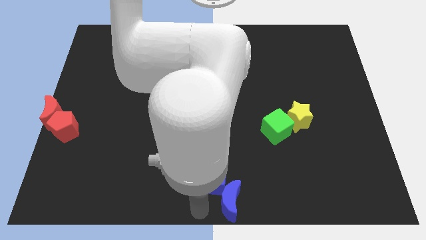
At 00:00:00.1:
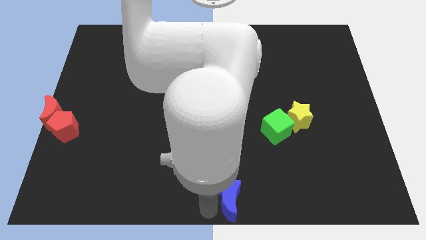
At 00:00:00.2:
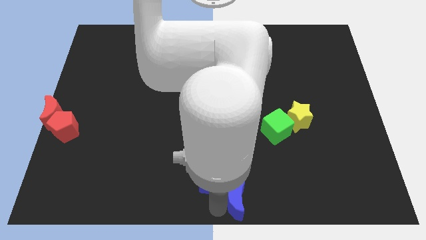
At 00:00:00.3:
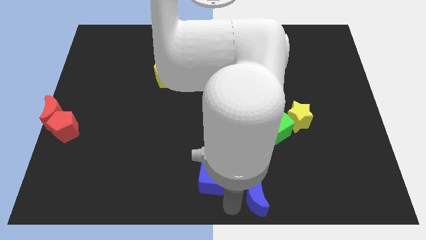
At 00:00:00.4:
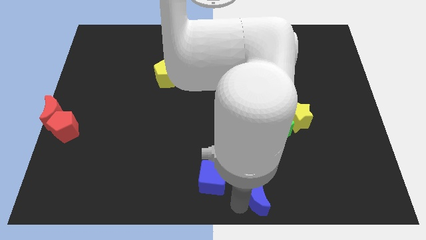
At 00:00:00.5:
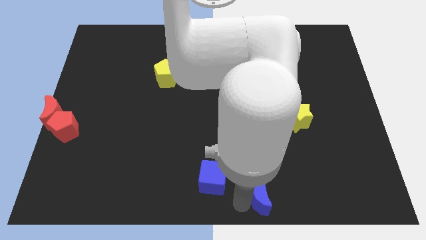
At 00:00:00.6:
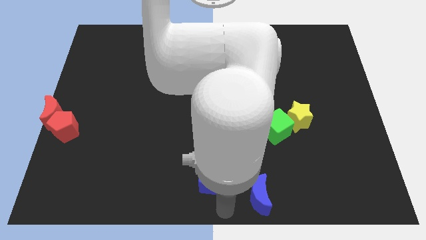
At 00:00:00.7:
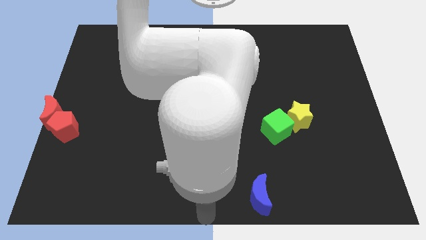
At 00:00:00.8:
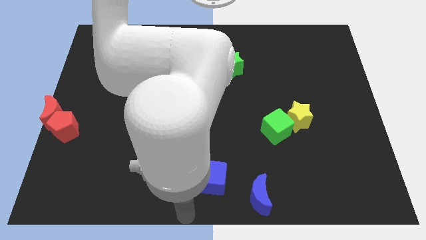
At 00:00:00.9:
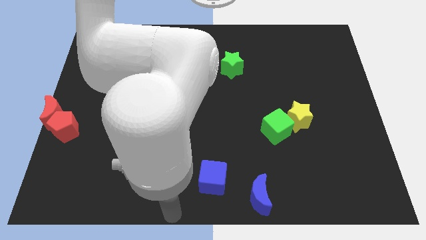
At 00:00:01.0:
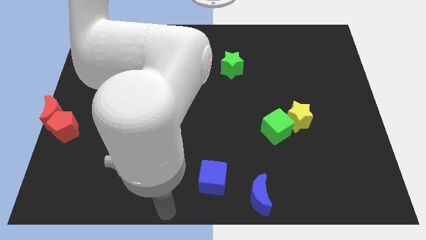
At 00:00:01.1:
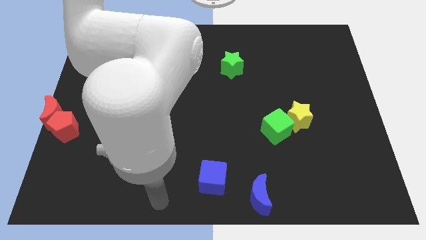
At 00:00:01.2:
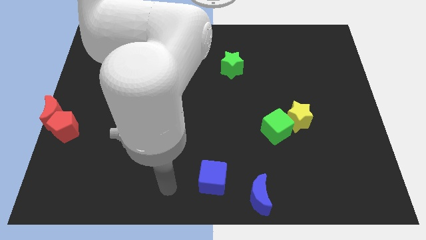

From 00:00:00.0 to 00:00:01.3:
separate the blue crescent from the blue cube

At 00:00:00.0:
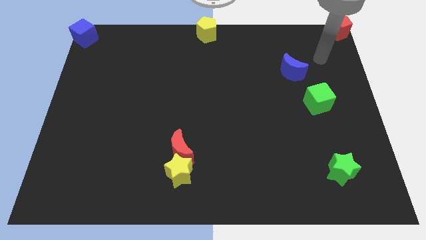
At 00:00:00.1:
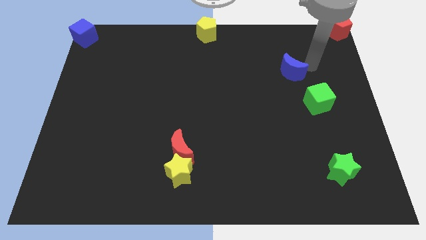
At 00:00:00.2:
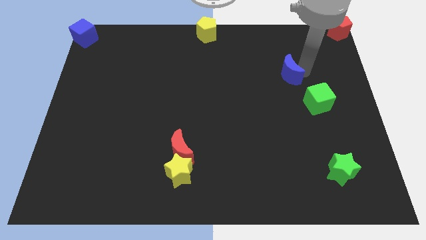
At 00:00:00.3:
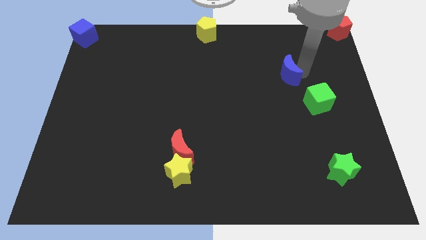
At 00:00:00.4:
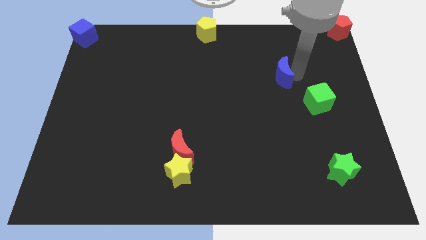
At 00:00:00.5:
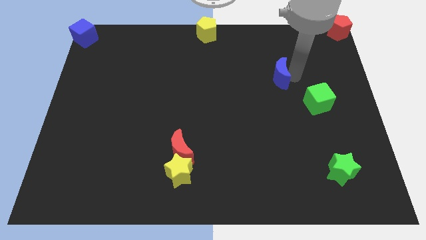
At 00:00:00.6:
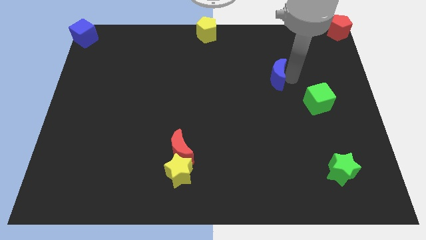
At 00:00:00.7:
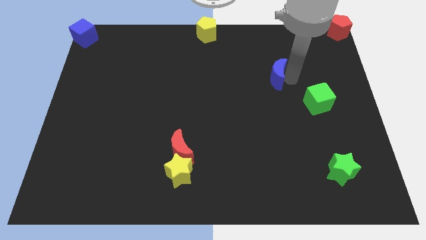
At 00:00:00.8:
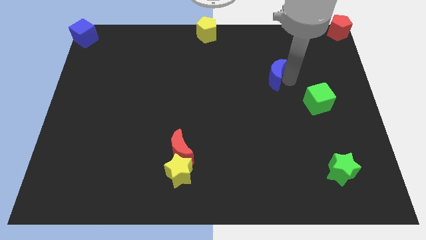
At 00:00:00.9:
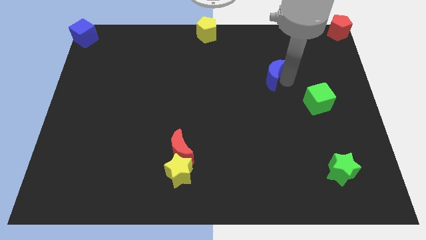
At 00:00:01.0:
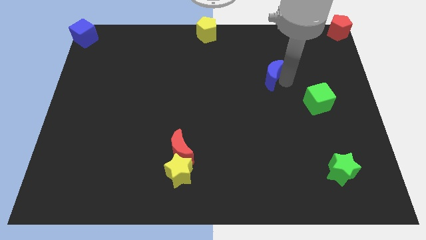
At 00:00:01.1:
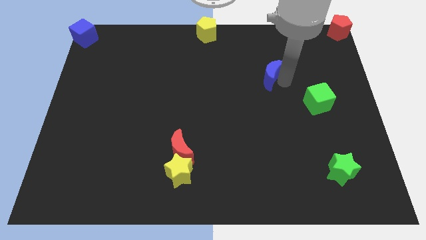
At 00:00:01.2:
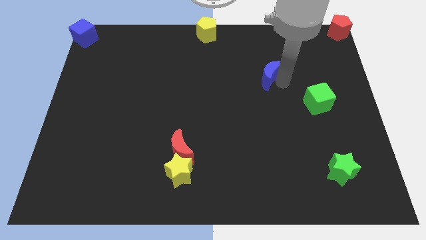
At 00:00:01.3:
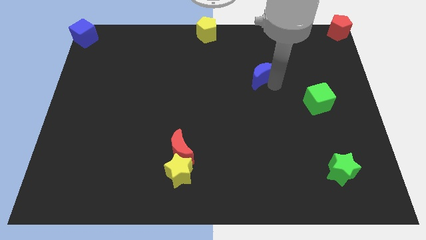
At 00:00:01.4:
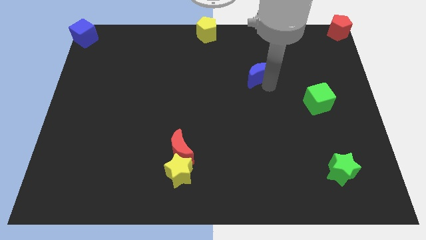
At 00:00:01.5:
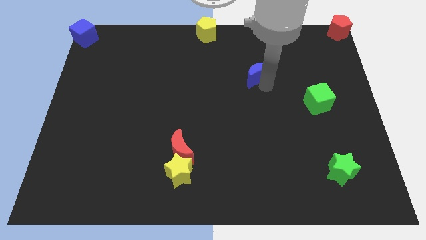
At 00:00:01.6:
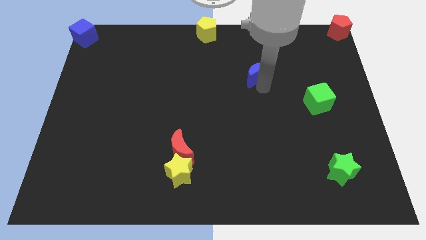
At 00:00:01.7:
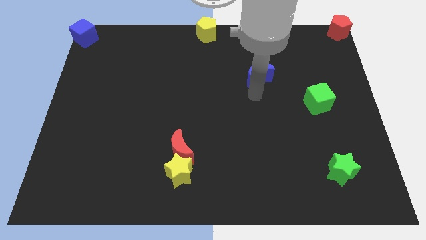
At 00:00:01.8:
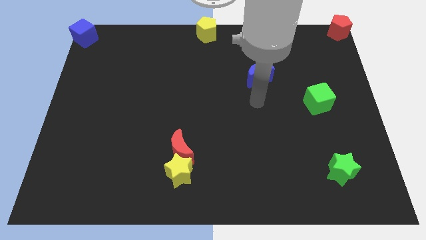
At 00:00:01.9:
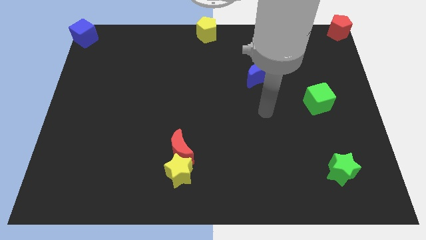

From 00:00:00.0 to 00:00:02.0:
push the blue moon to the left slightly

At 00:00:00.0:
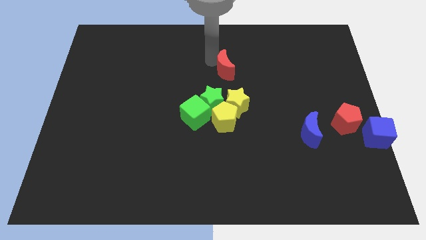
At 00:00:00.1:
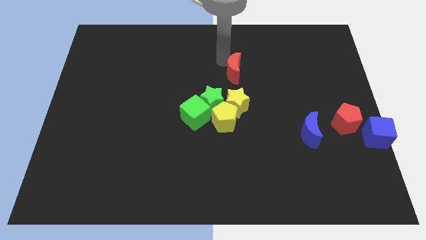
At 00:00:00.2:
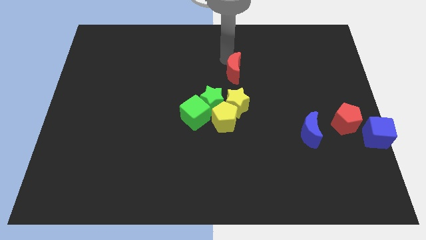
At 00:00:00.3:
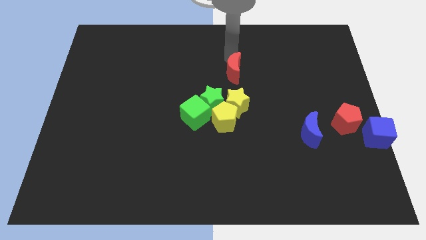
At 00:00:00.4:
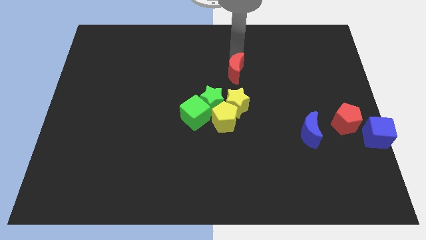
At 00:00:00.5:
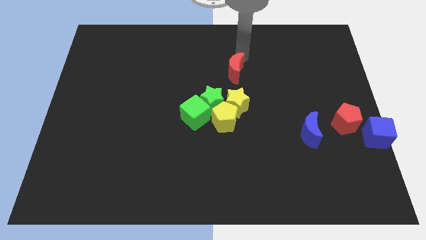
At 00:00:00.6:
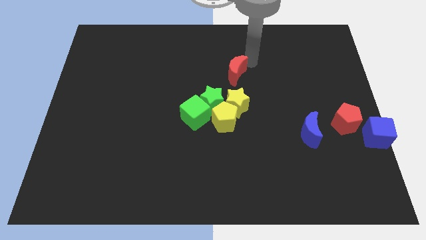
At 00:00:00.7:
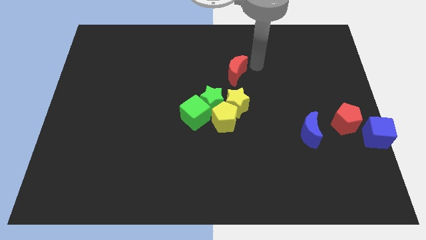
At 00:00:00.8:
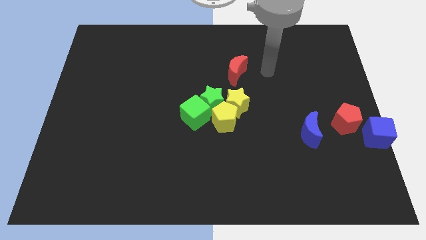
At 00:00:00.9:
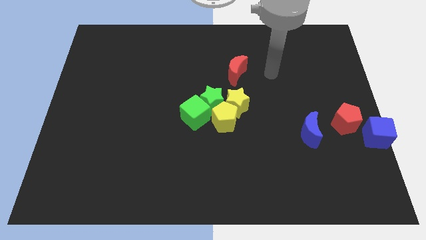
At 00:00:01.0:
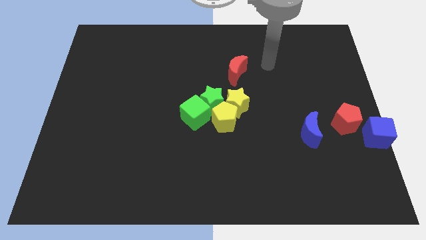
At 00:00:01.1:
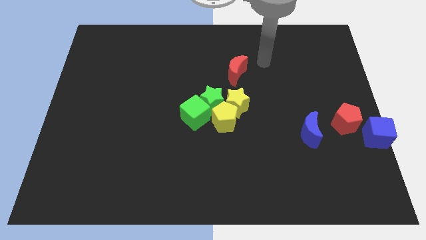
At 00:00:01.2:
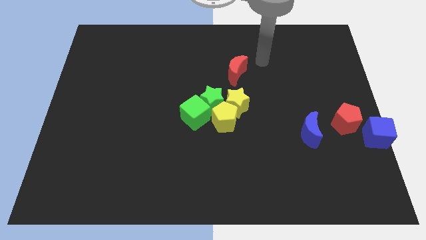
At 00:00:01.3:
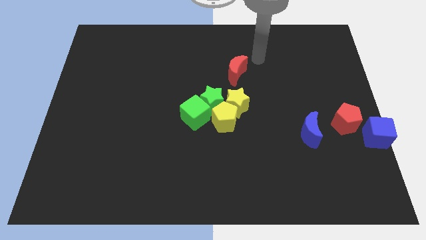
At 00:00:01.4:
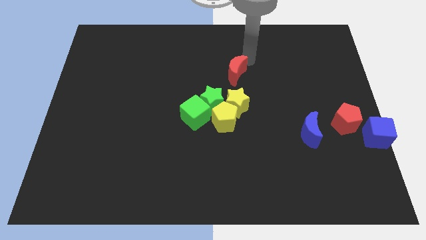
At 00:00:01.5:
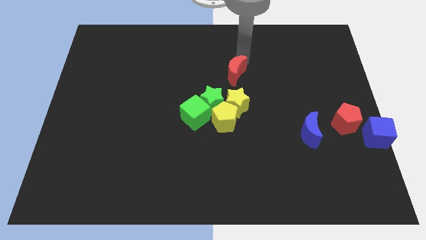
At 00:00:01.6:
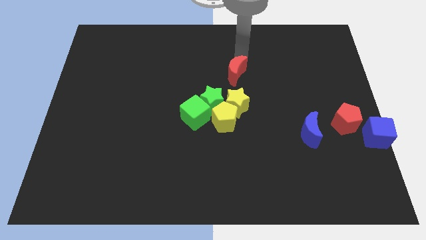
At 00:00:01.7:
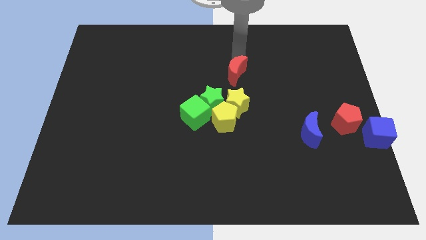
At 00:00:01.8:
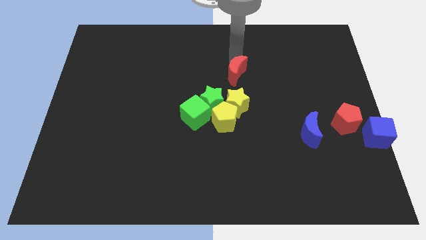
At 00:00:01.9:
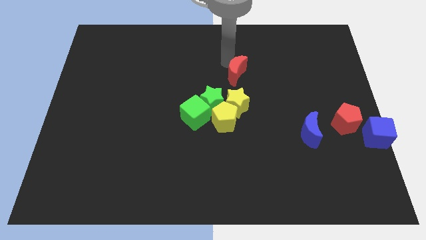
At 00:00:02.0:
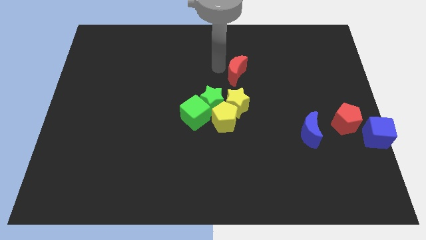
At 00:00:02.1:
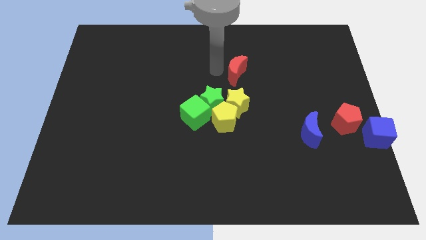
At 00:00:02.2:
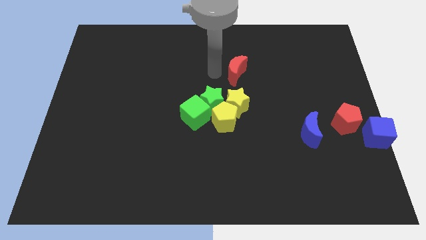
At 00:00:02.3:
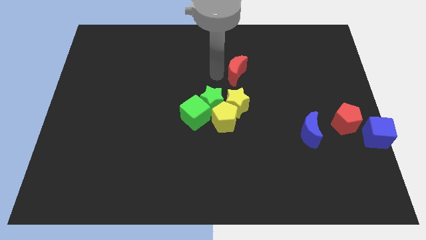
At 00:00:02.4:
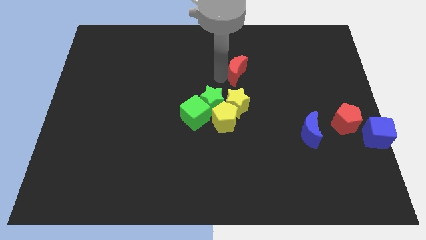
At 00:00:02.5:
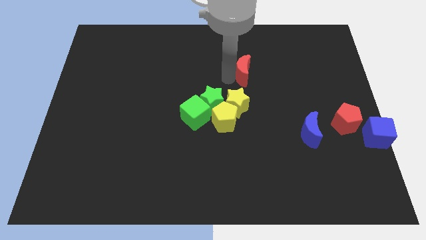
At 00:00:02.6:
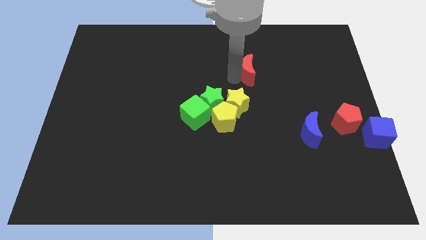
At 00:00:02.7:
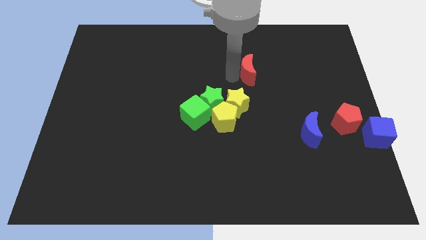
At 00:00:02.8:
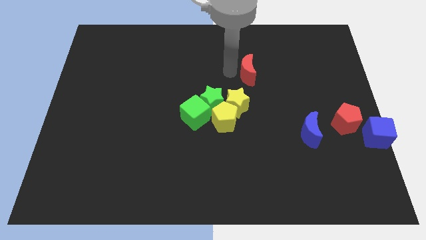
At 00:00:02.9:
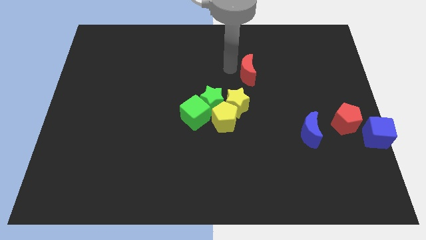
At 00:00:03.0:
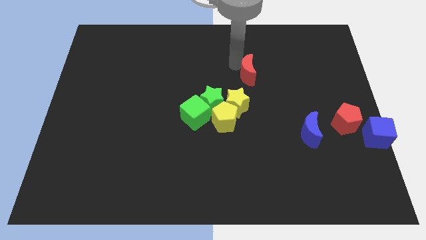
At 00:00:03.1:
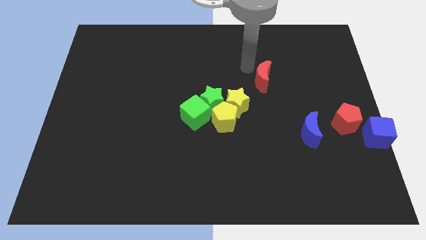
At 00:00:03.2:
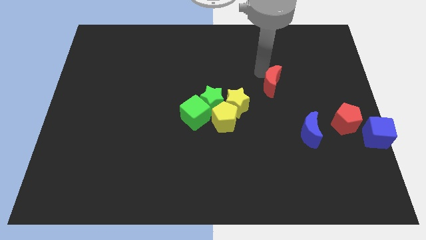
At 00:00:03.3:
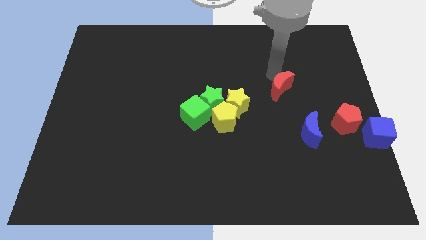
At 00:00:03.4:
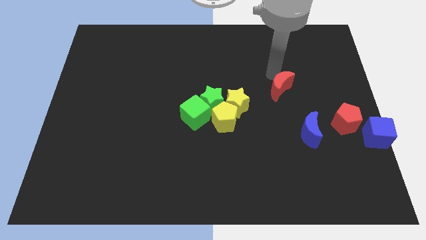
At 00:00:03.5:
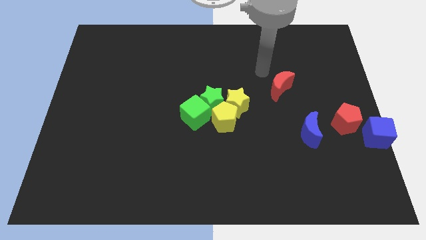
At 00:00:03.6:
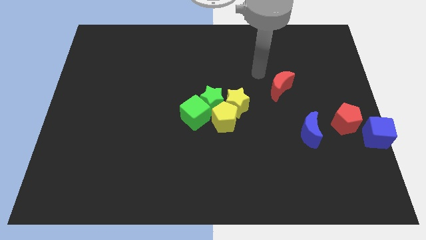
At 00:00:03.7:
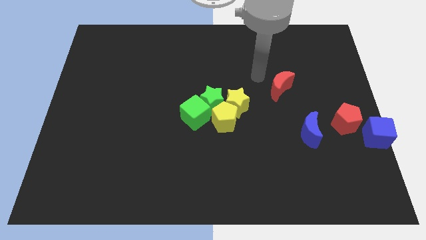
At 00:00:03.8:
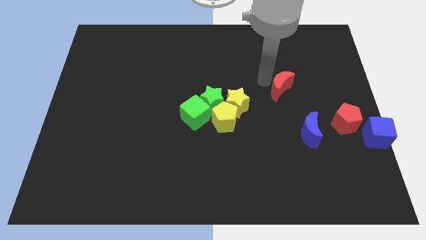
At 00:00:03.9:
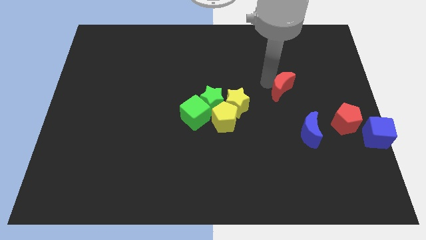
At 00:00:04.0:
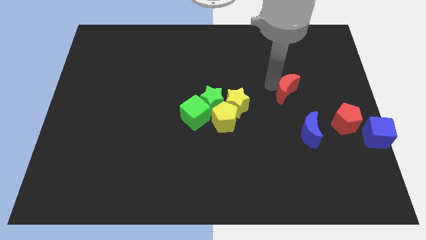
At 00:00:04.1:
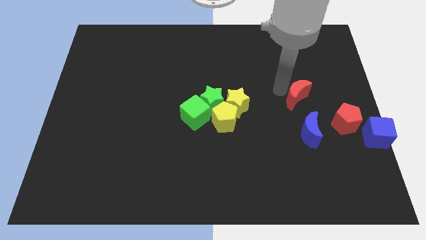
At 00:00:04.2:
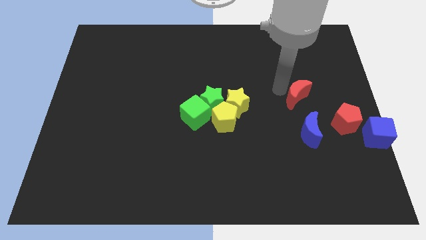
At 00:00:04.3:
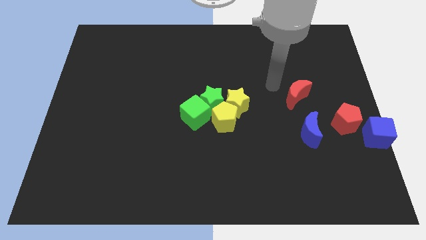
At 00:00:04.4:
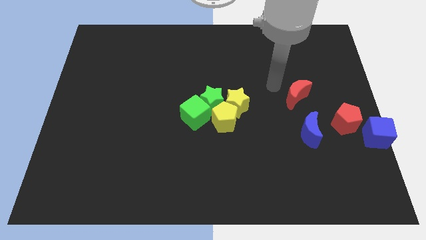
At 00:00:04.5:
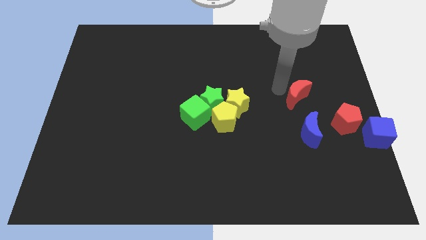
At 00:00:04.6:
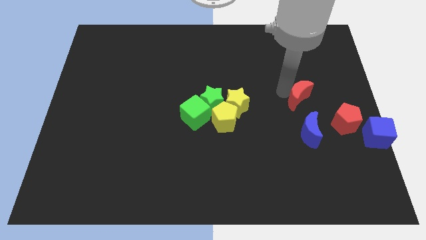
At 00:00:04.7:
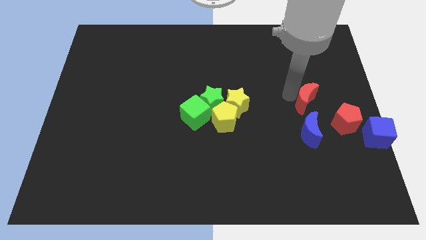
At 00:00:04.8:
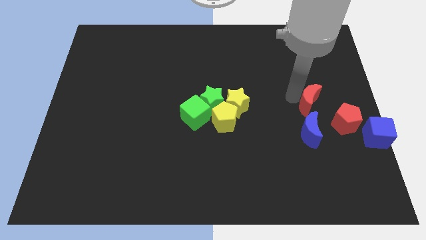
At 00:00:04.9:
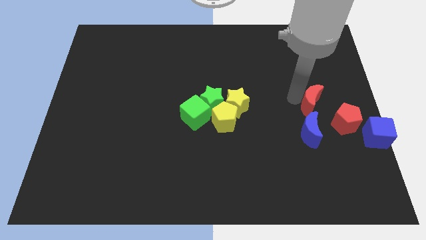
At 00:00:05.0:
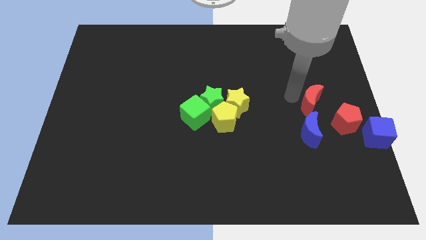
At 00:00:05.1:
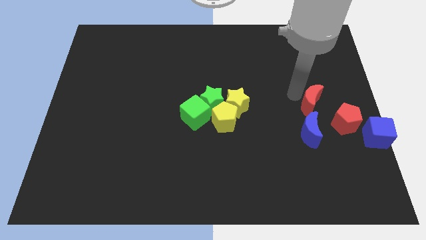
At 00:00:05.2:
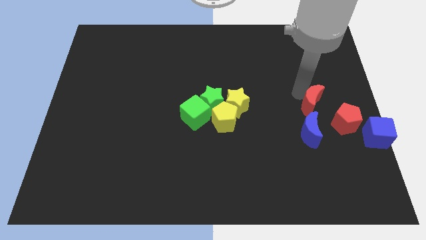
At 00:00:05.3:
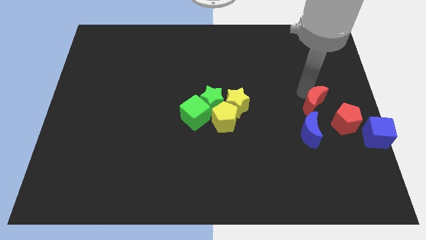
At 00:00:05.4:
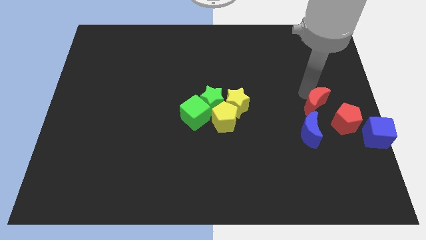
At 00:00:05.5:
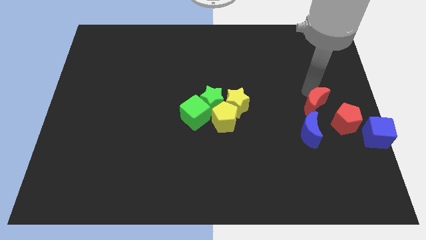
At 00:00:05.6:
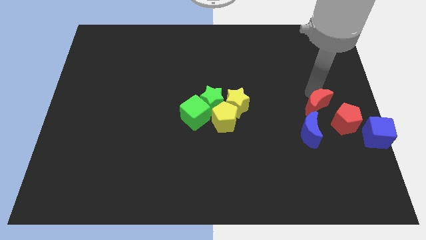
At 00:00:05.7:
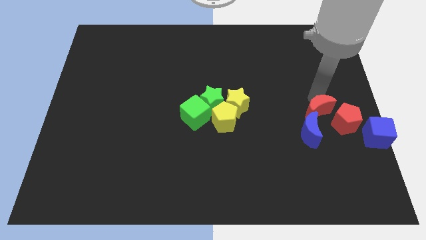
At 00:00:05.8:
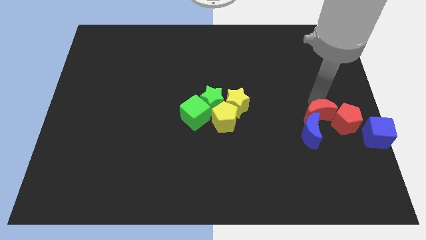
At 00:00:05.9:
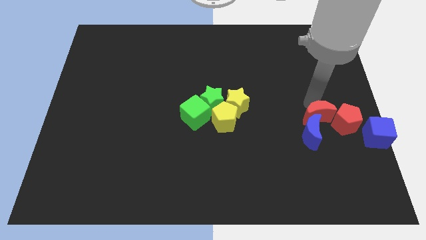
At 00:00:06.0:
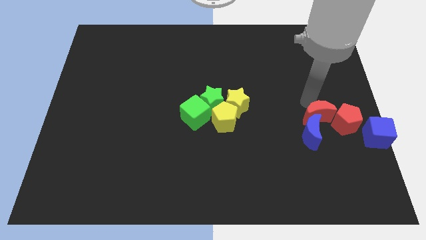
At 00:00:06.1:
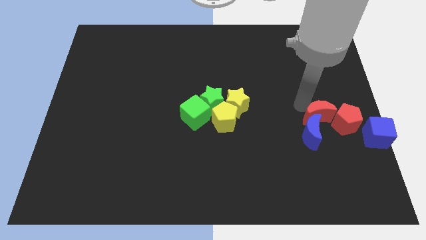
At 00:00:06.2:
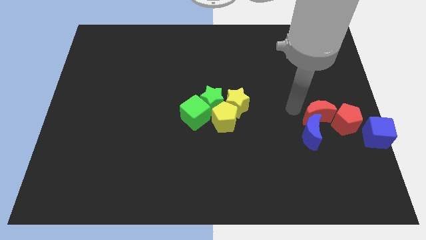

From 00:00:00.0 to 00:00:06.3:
push the red crescent into the blue moon
